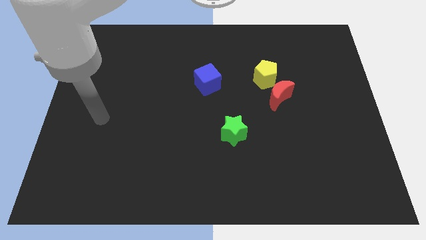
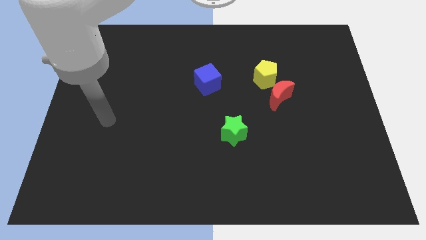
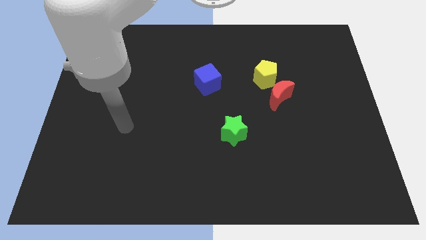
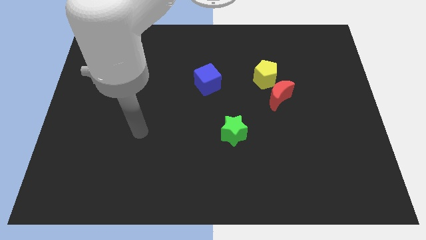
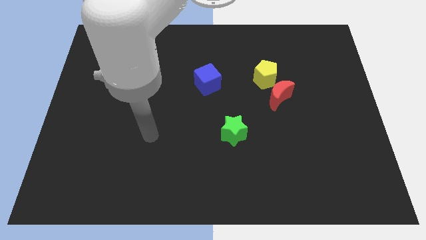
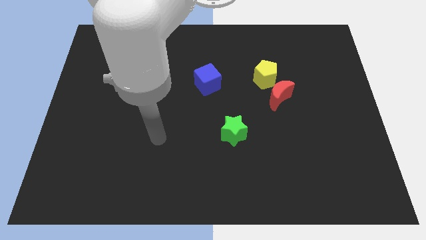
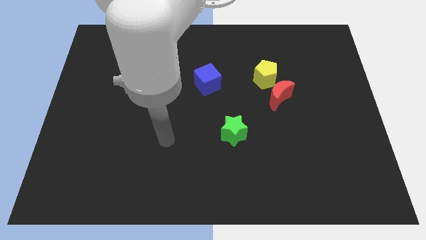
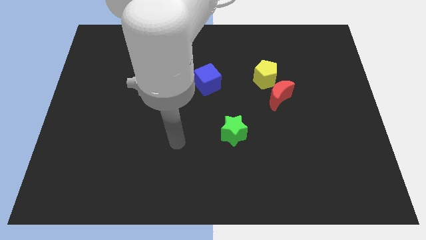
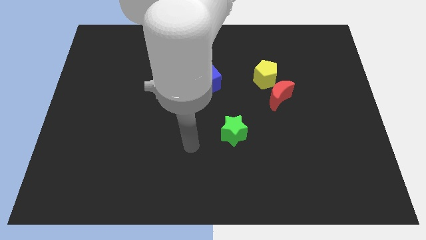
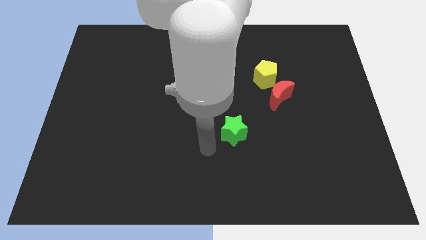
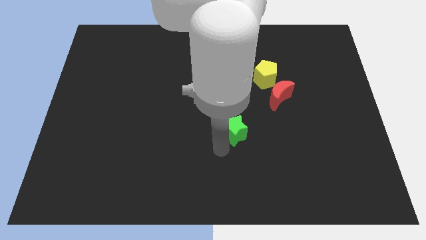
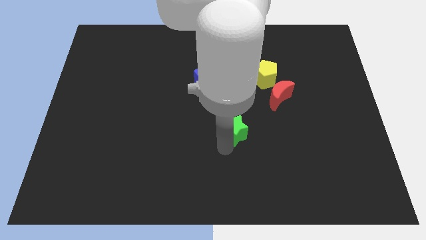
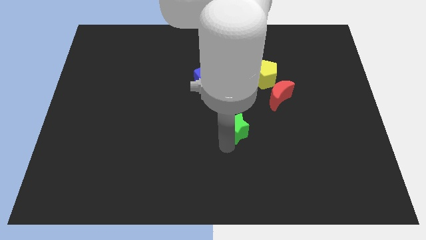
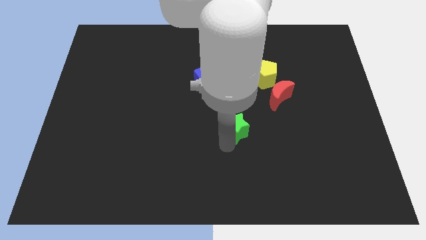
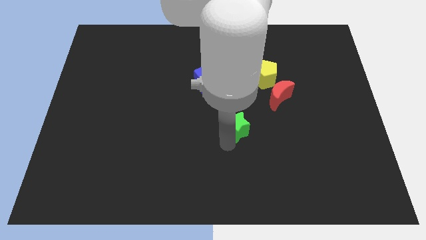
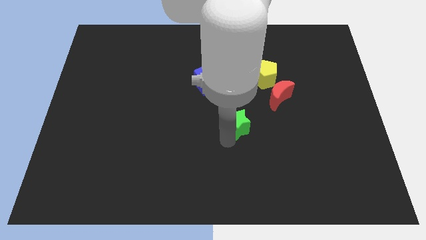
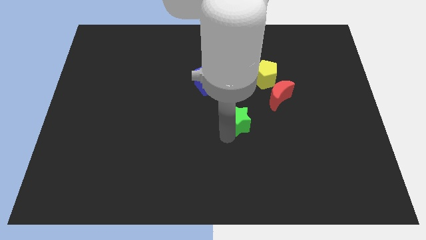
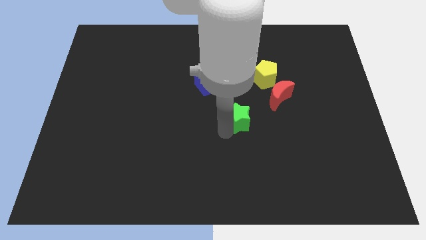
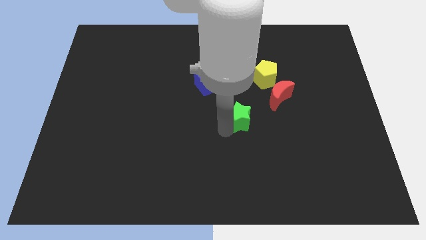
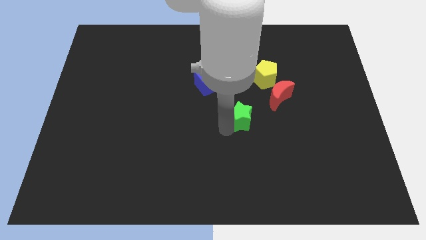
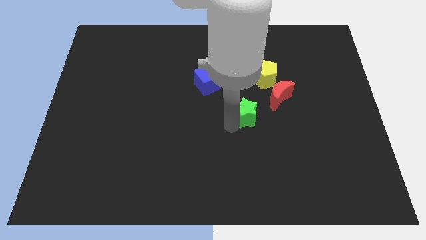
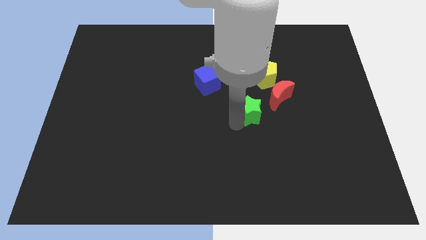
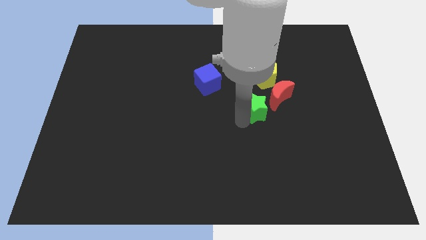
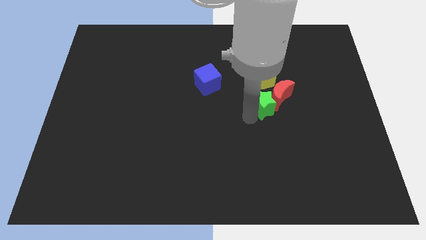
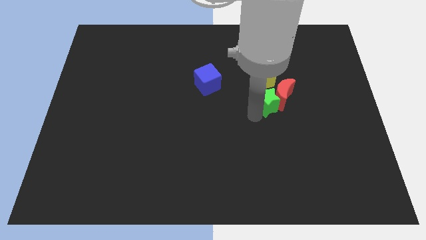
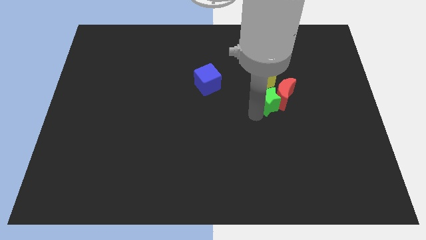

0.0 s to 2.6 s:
slide the green star next to the red moon

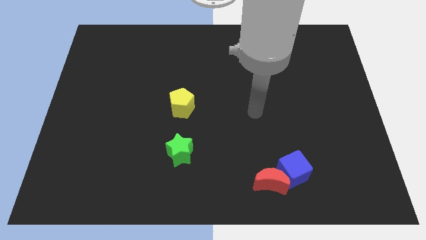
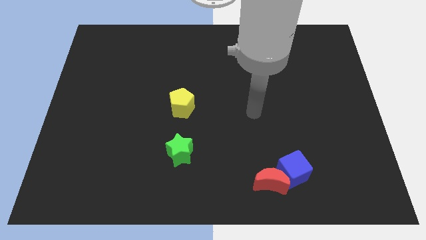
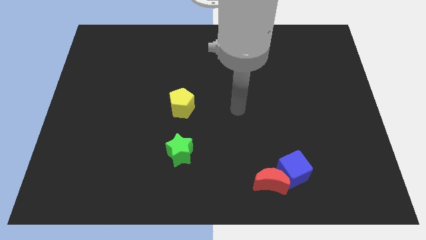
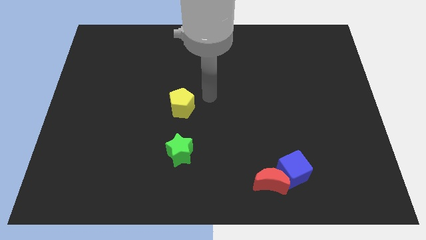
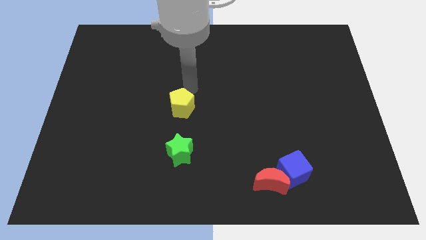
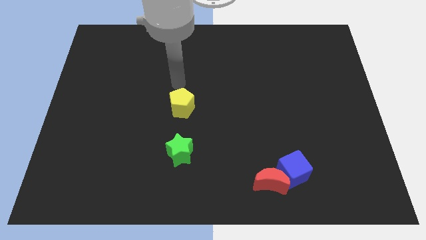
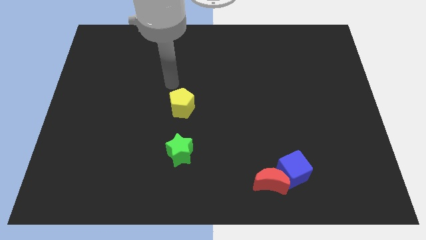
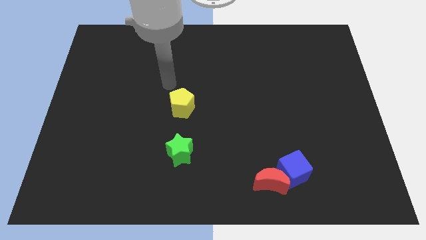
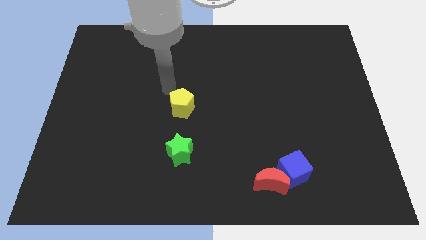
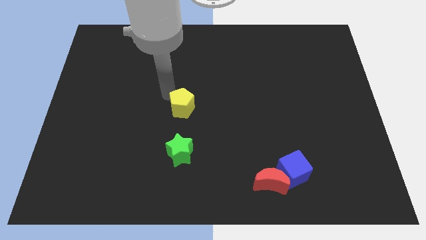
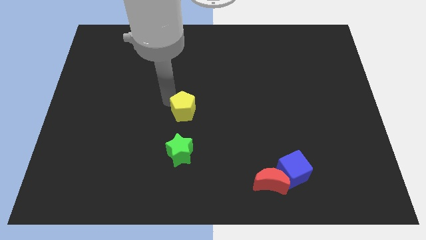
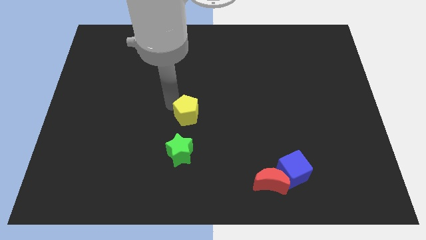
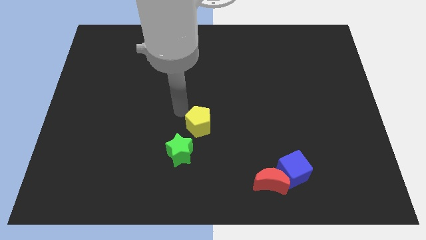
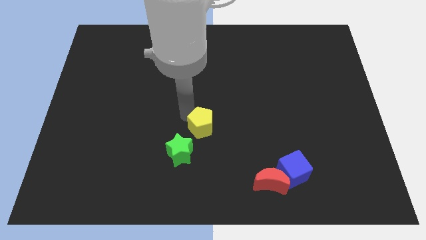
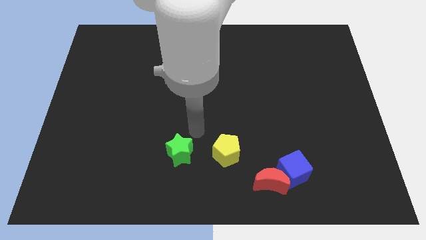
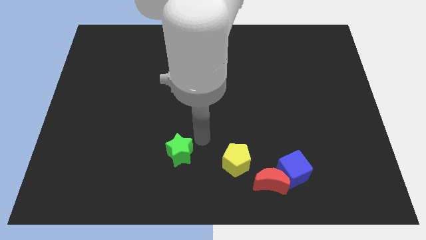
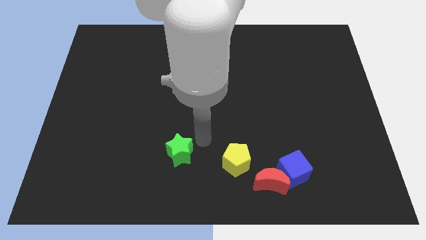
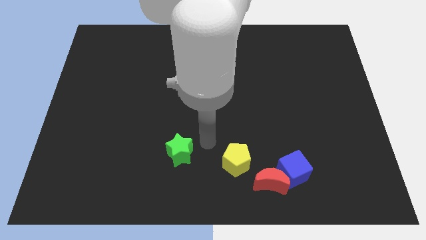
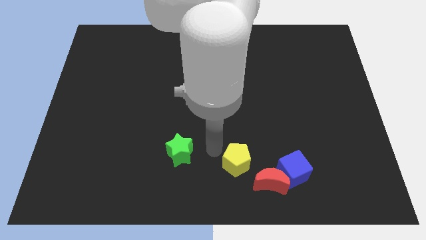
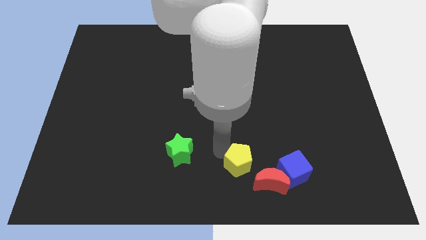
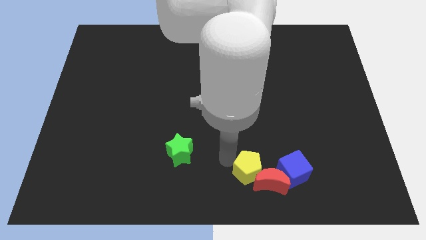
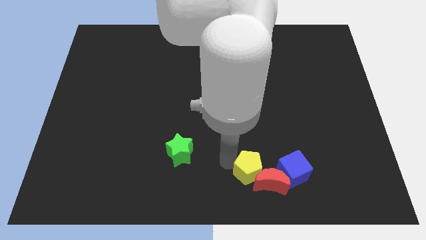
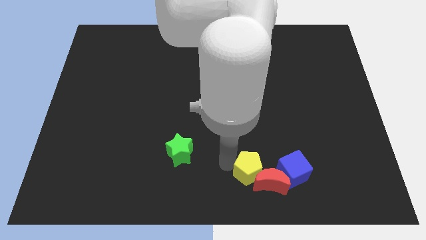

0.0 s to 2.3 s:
put the pentagon close to the red moon

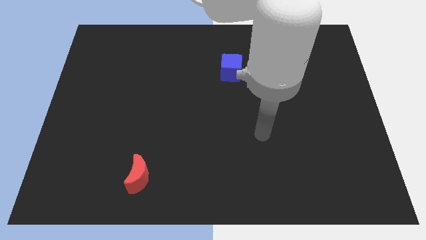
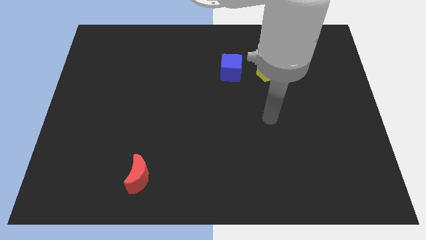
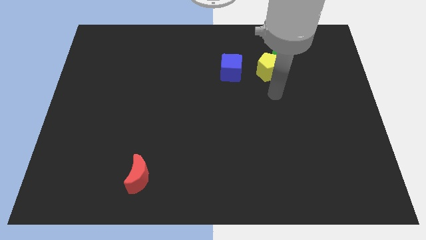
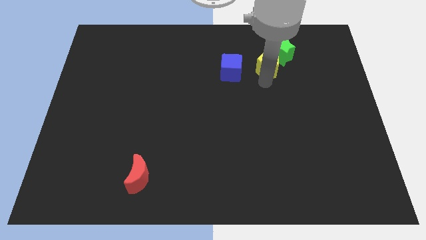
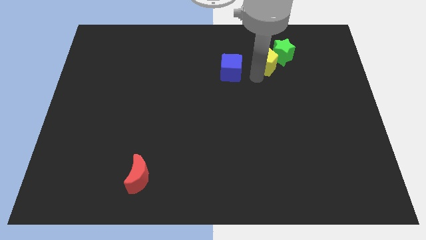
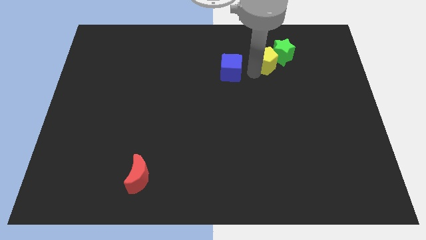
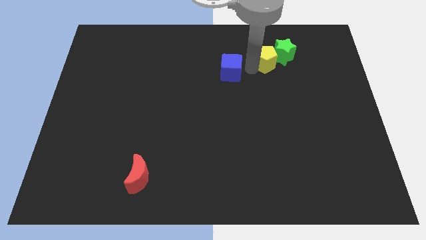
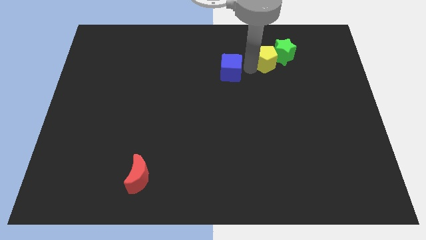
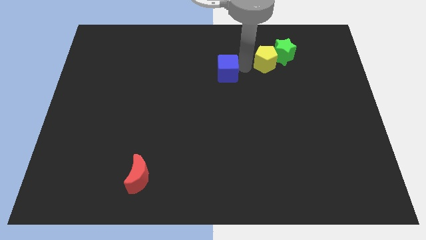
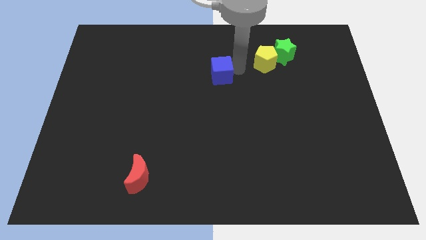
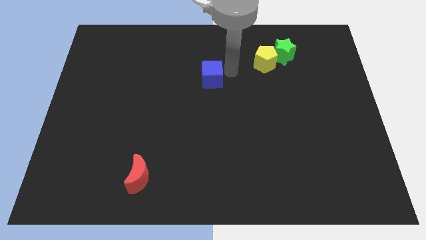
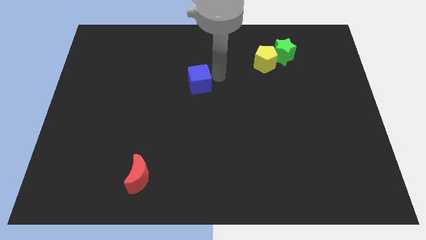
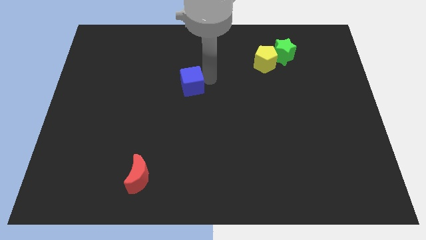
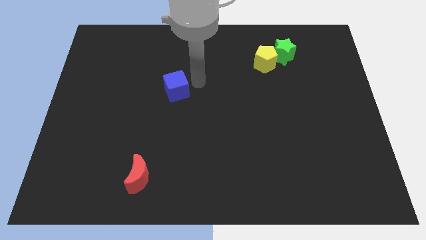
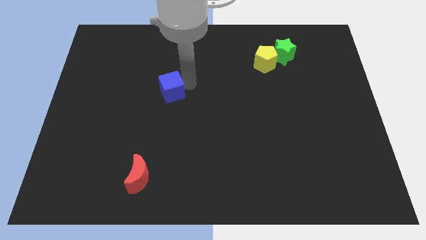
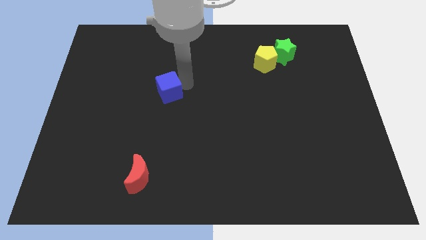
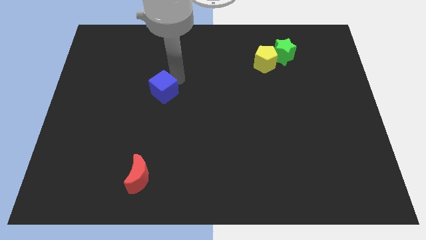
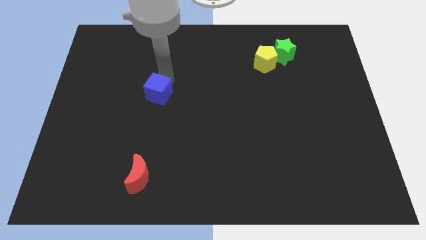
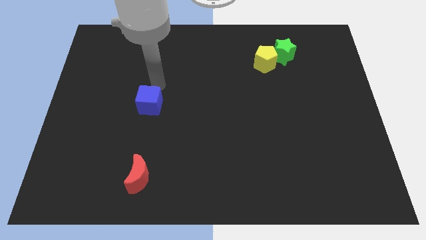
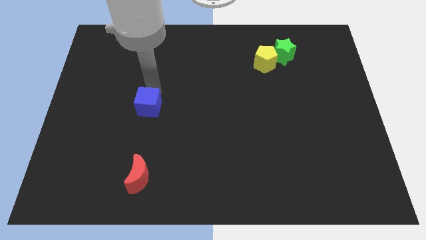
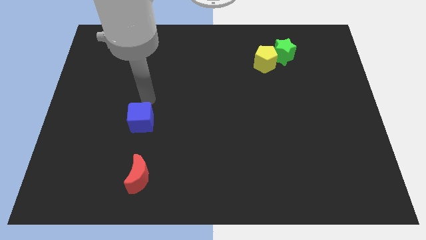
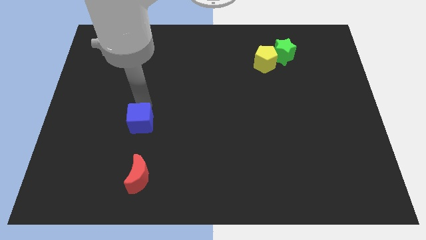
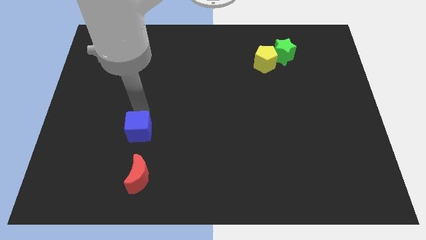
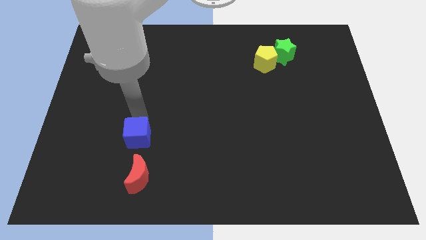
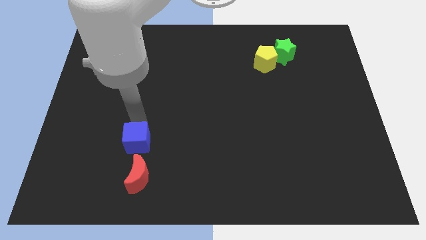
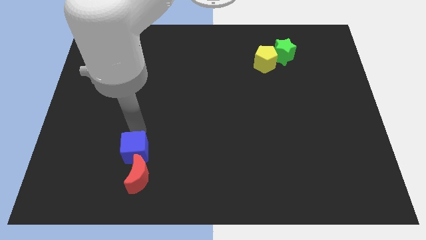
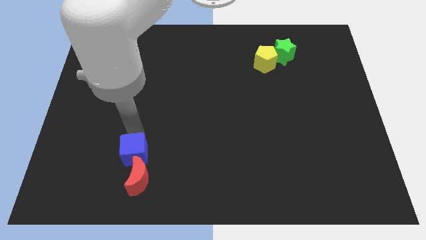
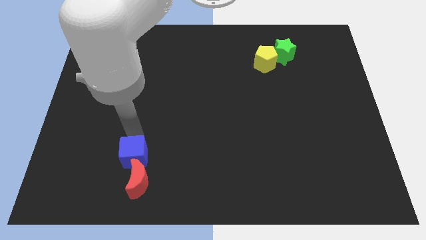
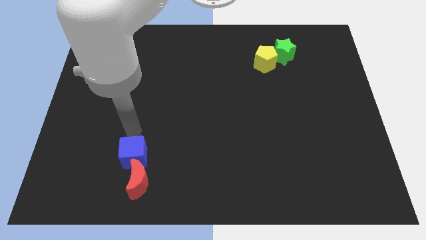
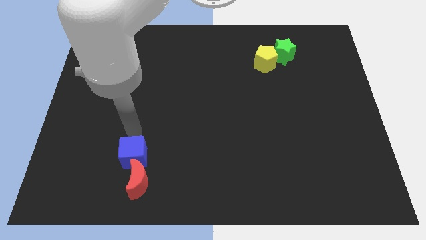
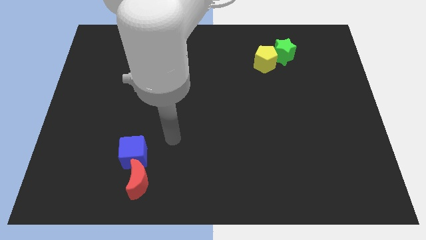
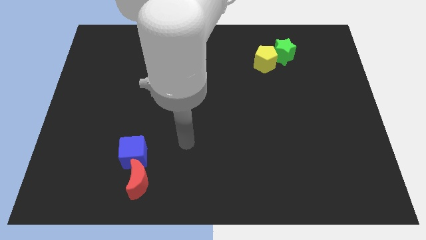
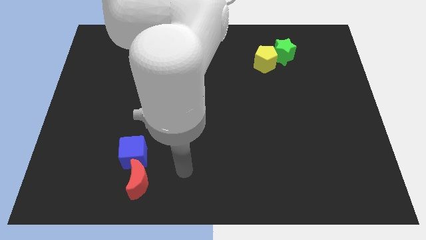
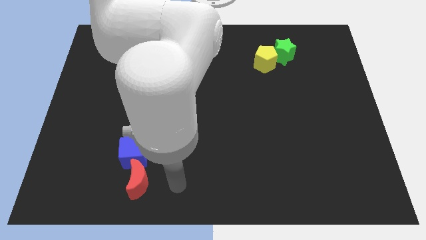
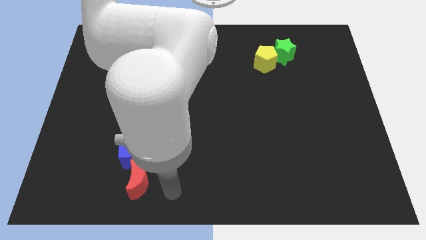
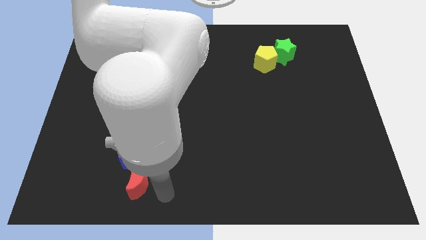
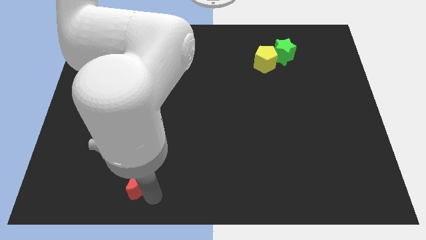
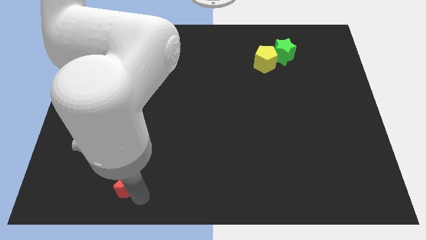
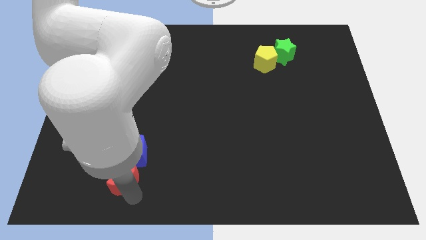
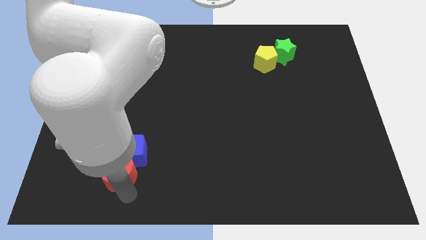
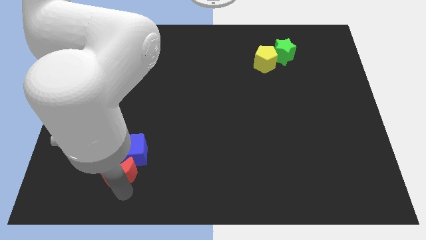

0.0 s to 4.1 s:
move the blue cube close to the red moon
